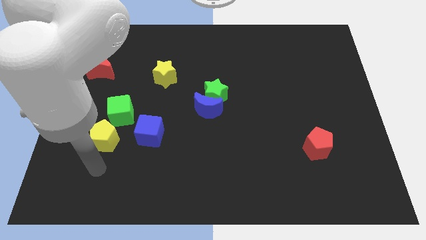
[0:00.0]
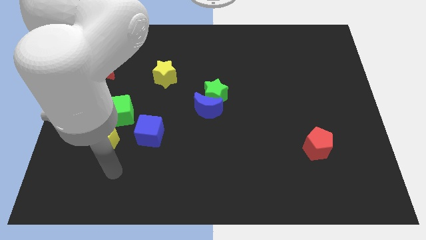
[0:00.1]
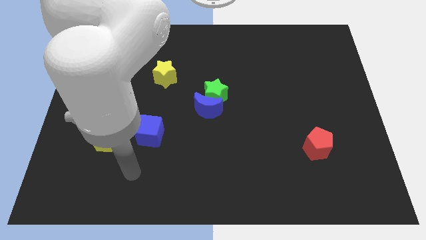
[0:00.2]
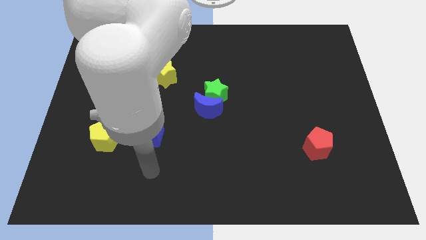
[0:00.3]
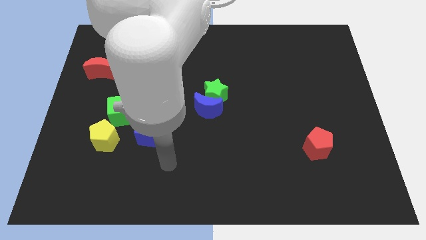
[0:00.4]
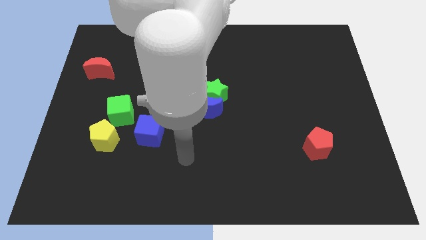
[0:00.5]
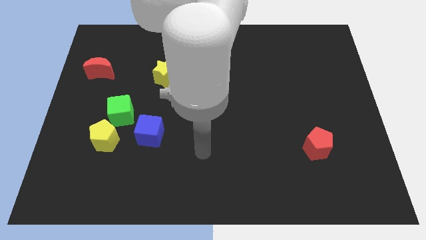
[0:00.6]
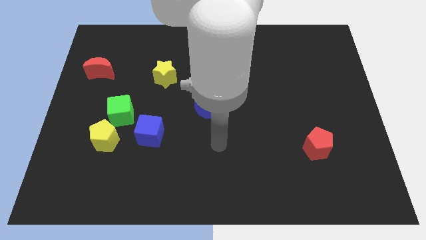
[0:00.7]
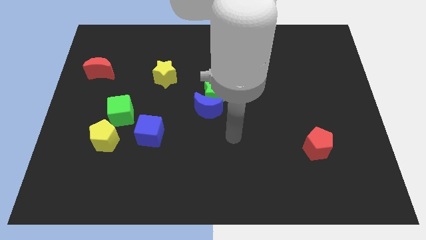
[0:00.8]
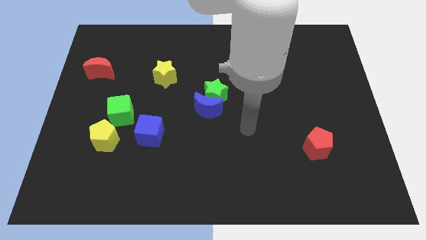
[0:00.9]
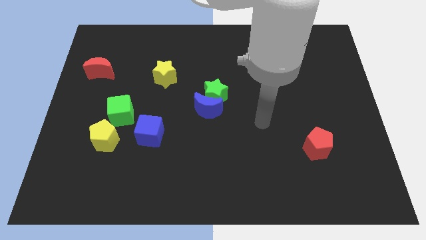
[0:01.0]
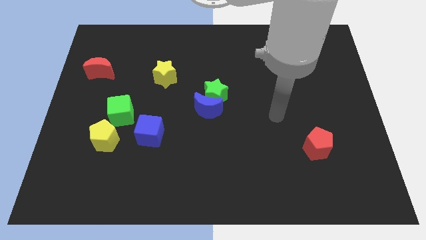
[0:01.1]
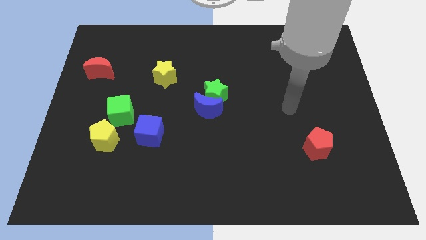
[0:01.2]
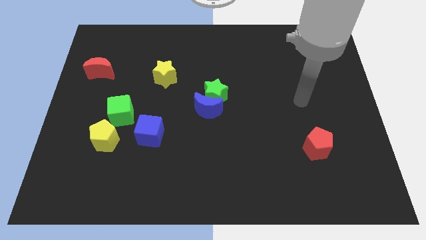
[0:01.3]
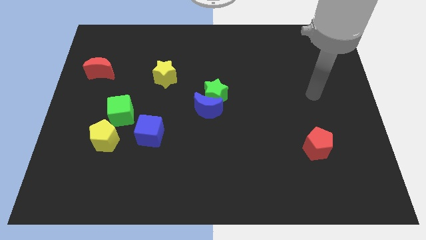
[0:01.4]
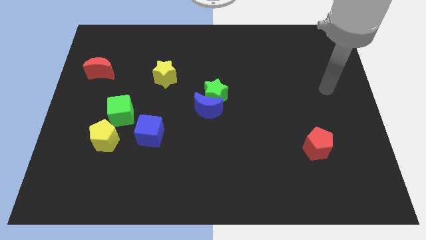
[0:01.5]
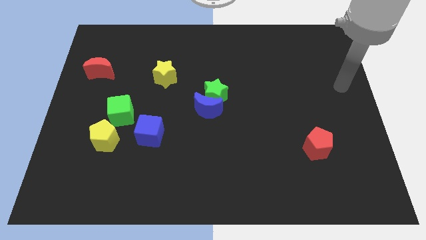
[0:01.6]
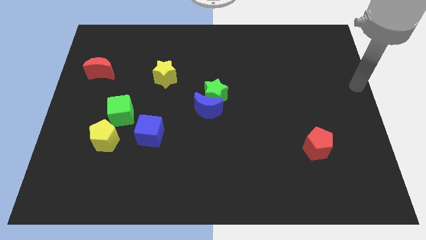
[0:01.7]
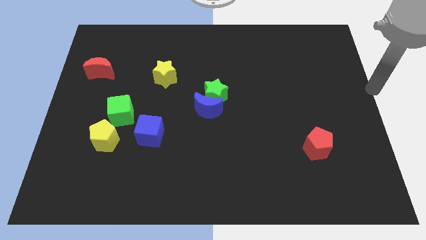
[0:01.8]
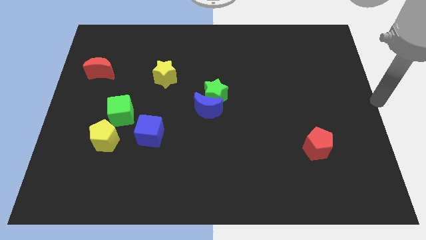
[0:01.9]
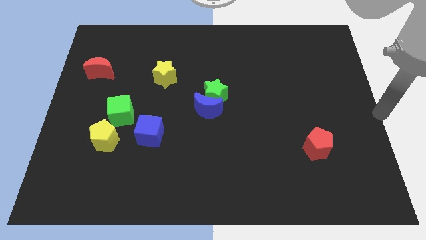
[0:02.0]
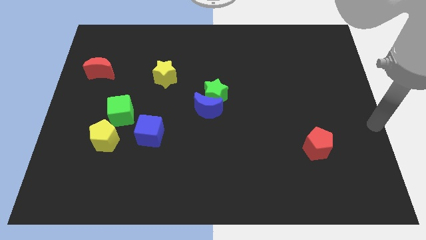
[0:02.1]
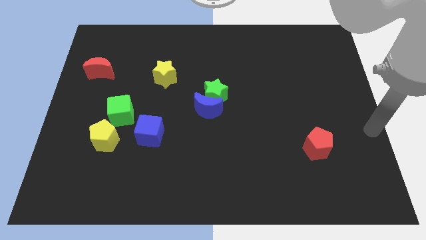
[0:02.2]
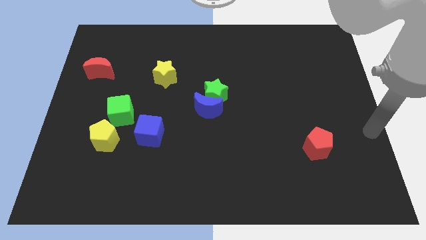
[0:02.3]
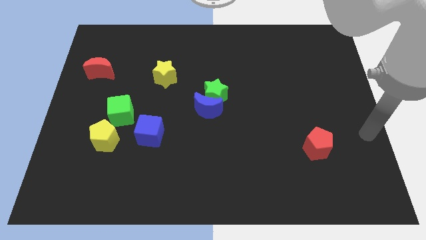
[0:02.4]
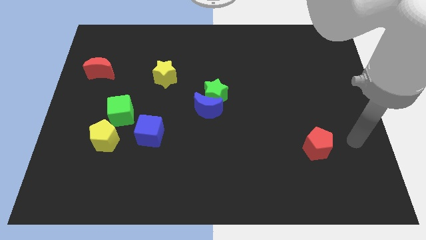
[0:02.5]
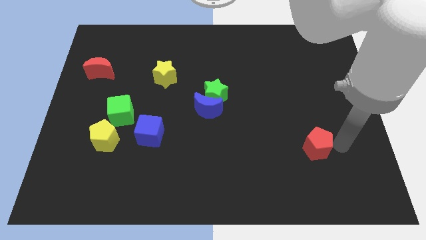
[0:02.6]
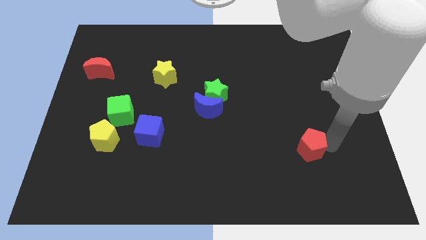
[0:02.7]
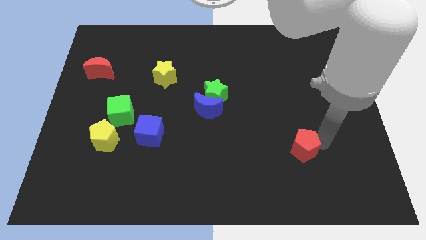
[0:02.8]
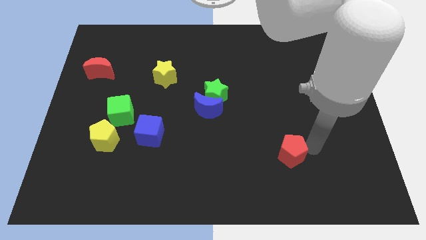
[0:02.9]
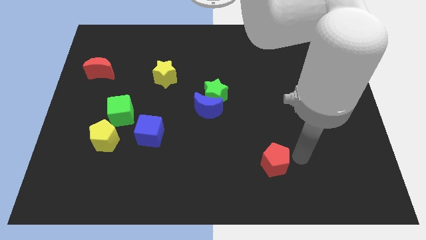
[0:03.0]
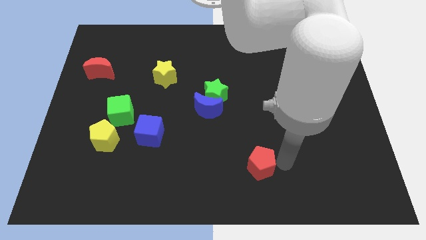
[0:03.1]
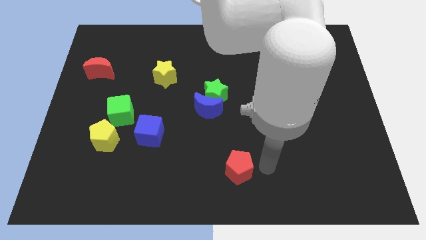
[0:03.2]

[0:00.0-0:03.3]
push the red pentagon towards the bottom center of the board

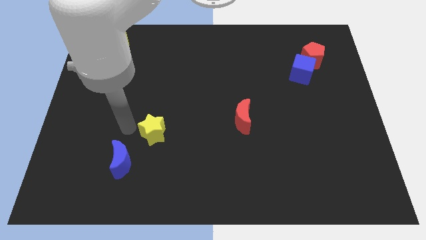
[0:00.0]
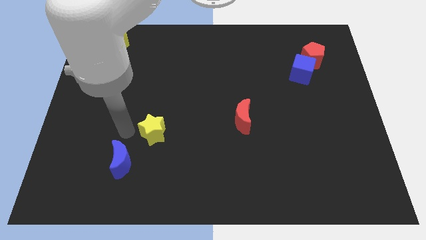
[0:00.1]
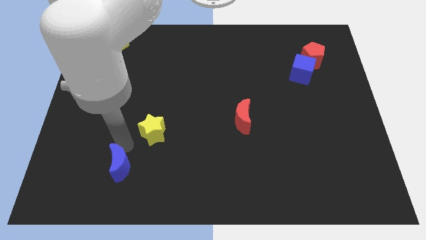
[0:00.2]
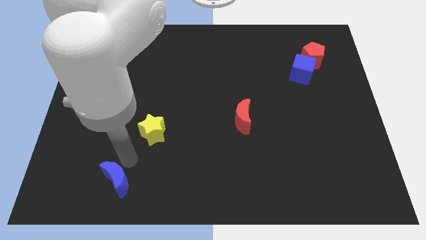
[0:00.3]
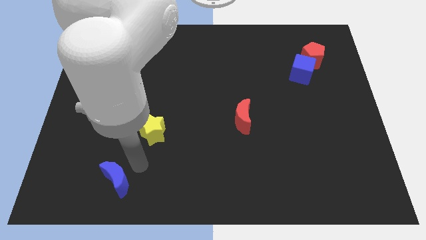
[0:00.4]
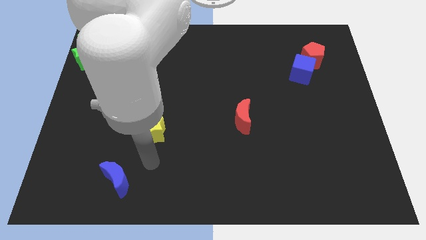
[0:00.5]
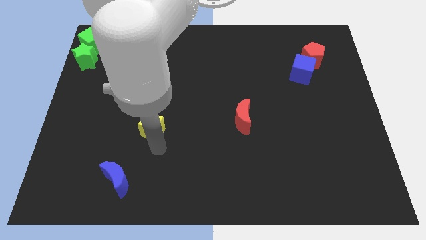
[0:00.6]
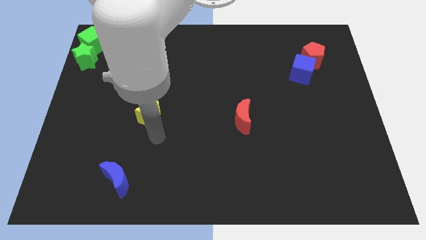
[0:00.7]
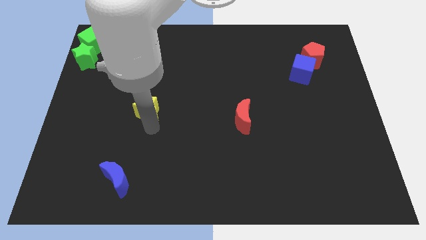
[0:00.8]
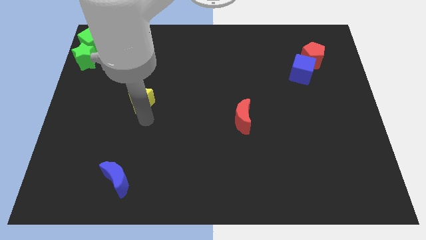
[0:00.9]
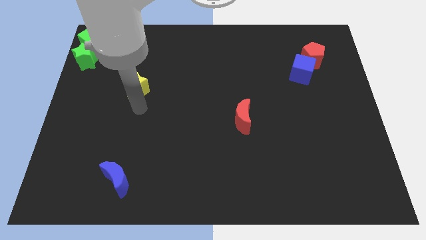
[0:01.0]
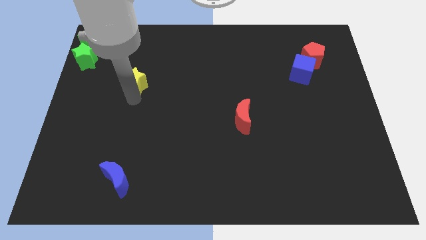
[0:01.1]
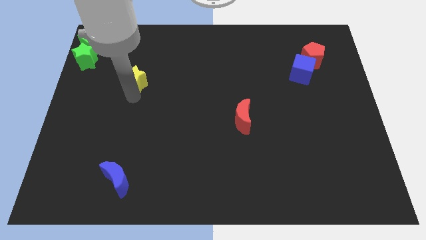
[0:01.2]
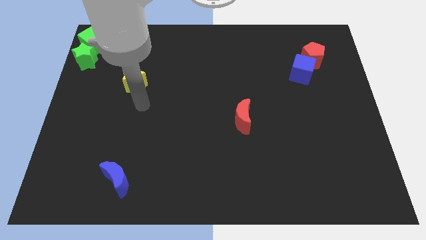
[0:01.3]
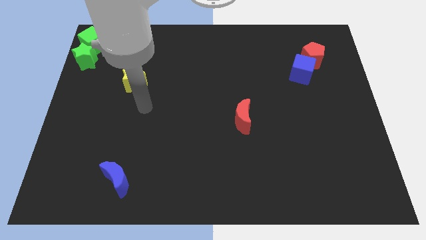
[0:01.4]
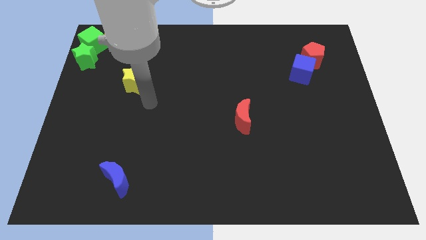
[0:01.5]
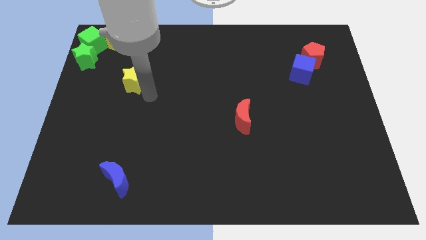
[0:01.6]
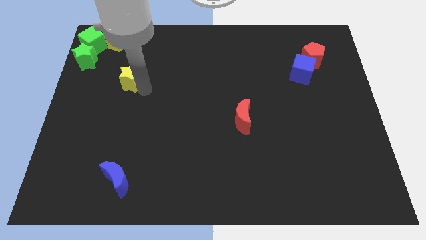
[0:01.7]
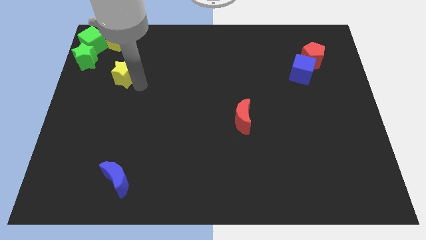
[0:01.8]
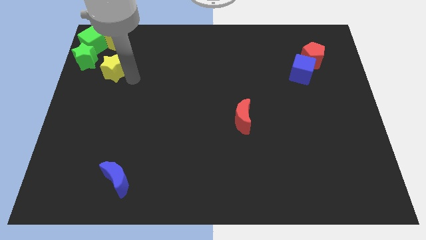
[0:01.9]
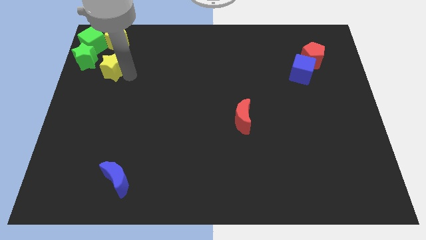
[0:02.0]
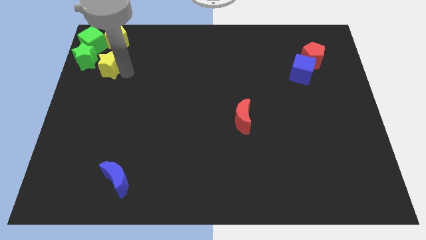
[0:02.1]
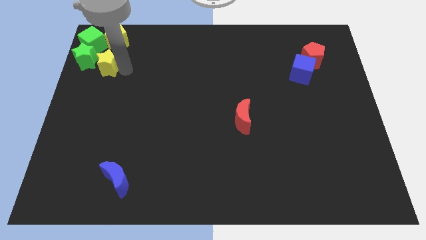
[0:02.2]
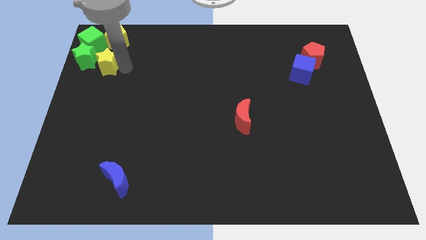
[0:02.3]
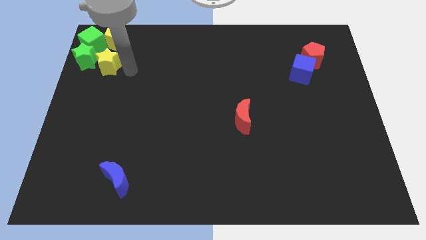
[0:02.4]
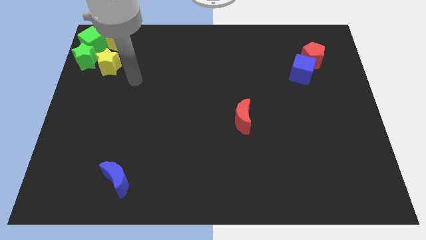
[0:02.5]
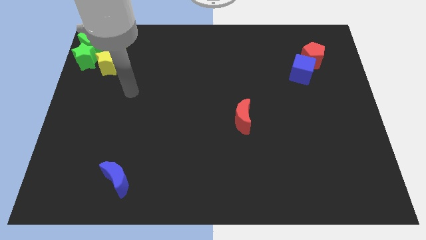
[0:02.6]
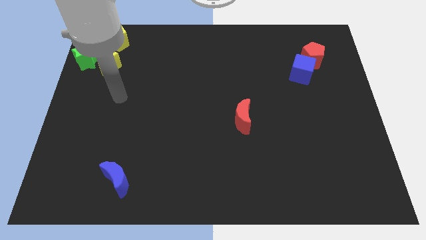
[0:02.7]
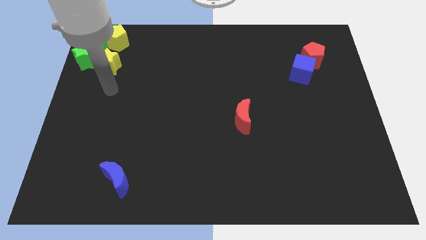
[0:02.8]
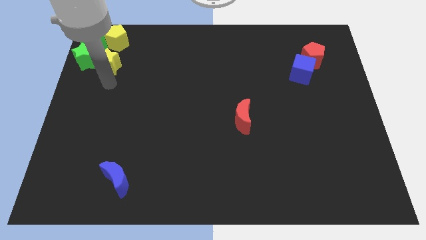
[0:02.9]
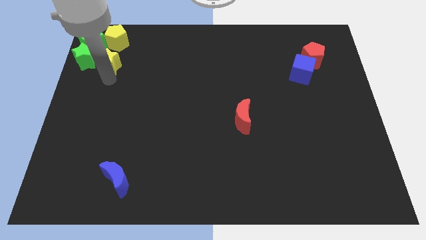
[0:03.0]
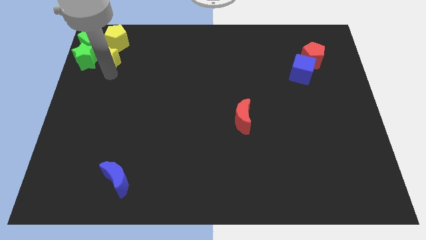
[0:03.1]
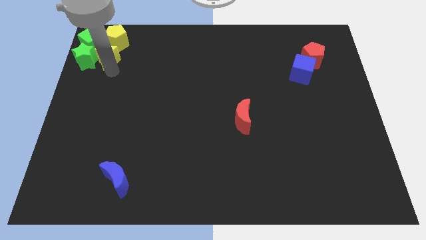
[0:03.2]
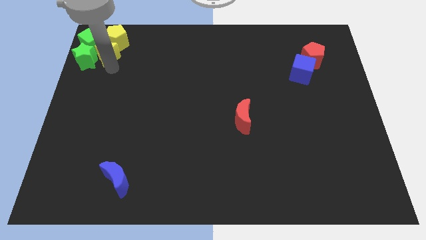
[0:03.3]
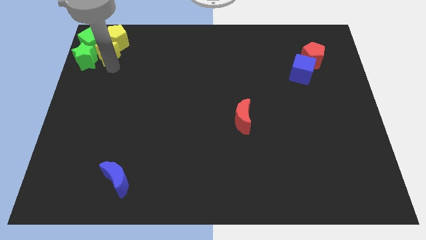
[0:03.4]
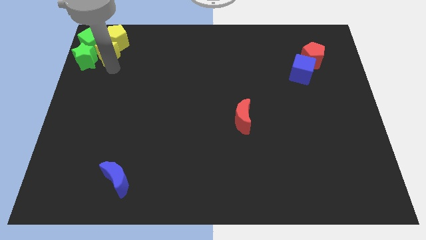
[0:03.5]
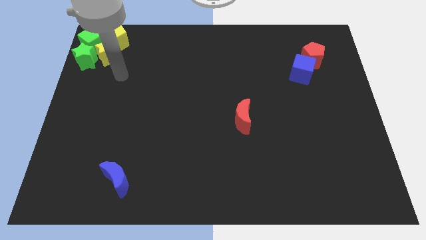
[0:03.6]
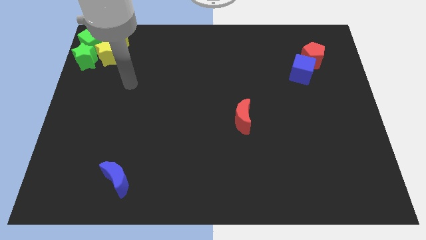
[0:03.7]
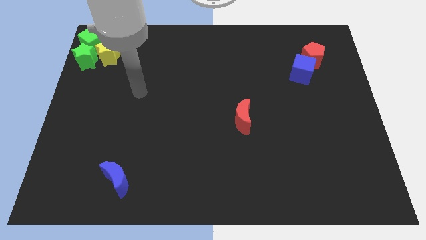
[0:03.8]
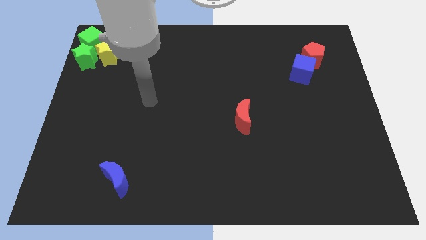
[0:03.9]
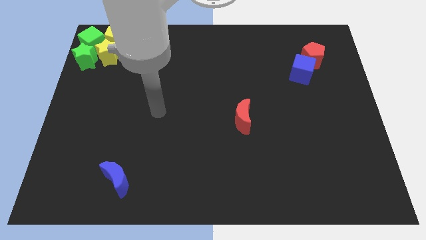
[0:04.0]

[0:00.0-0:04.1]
move the yellow star into the group of blocks

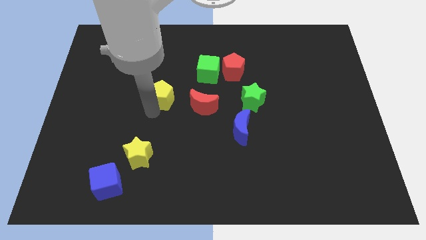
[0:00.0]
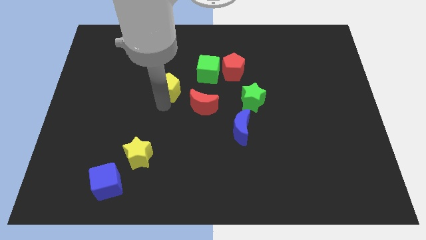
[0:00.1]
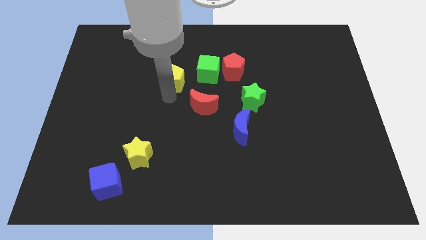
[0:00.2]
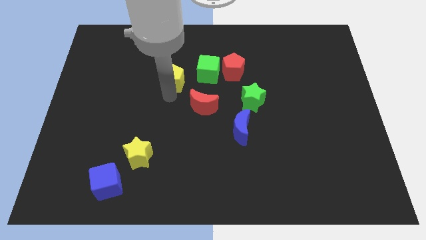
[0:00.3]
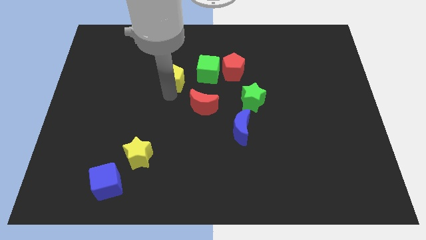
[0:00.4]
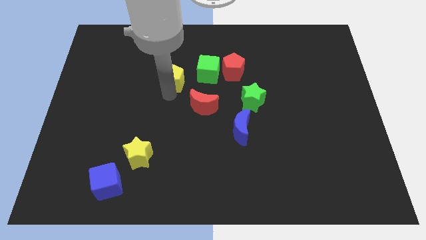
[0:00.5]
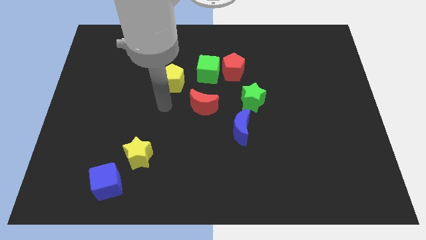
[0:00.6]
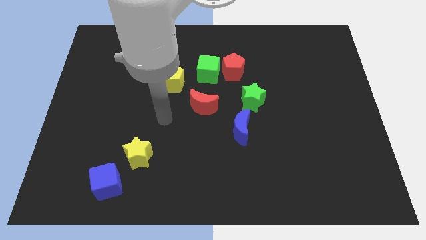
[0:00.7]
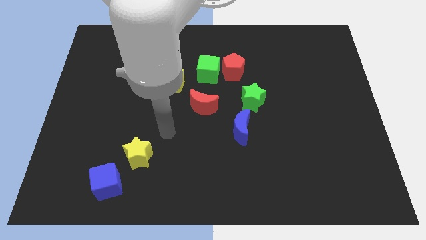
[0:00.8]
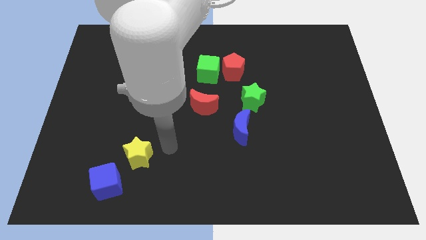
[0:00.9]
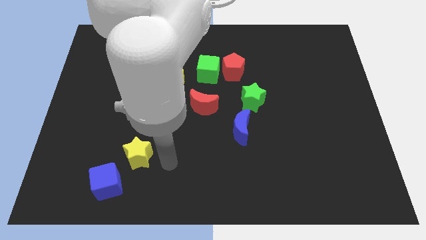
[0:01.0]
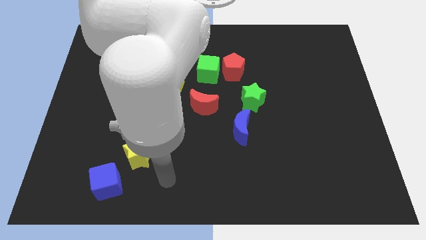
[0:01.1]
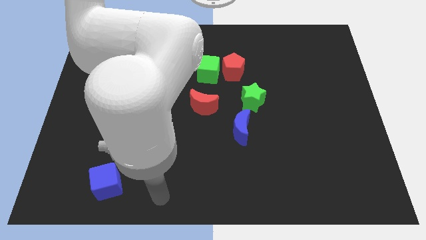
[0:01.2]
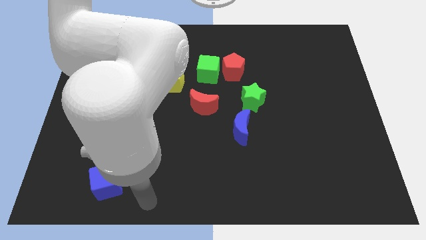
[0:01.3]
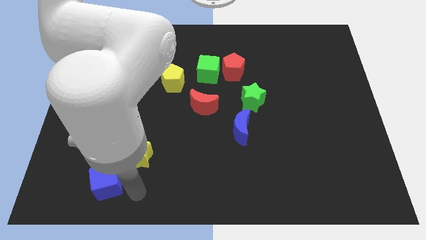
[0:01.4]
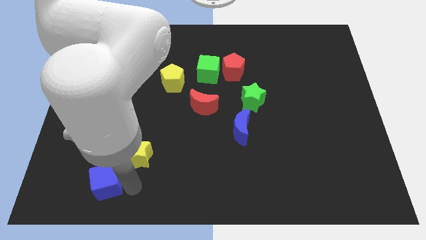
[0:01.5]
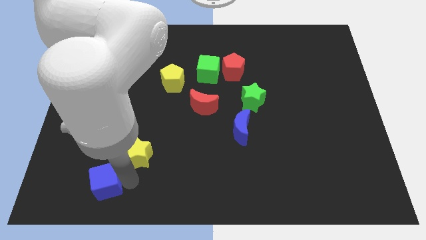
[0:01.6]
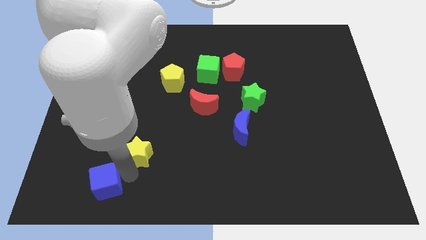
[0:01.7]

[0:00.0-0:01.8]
move your arm towards the yellow star
